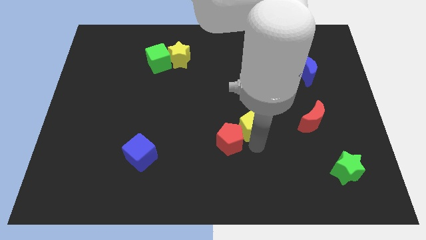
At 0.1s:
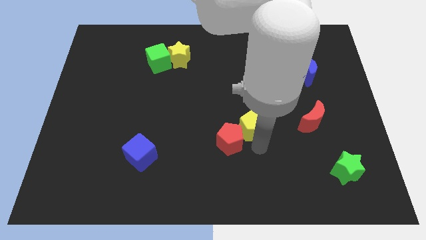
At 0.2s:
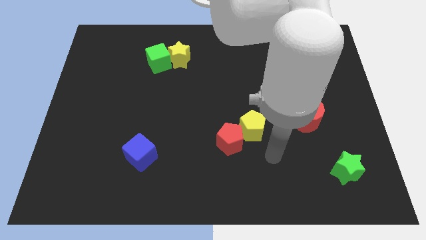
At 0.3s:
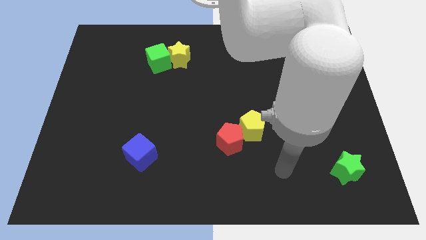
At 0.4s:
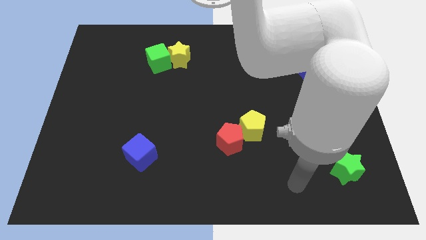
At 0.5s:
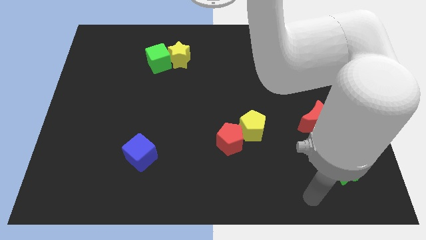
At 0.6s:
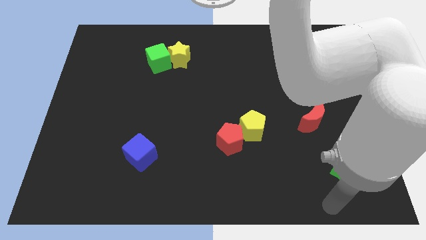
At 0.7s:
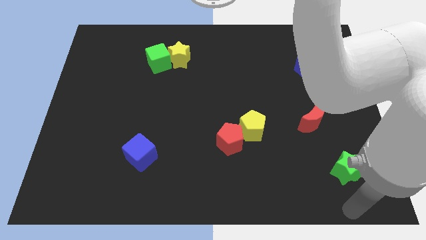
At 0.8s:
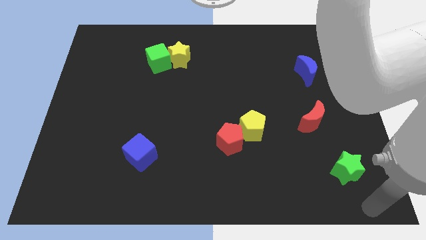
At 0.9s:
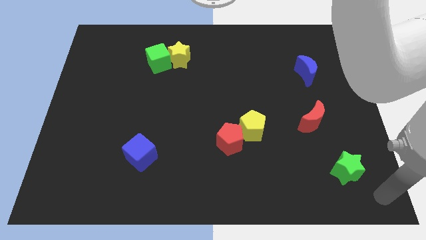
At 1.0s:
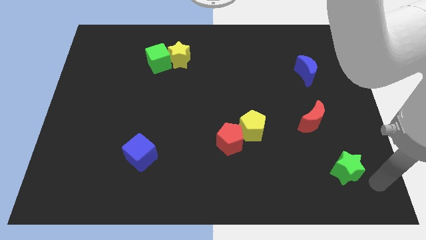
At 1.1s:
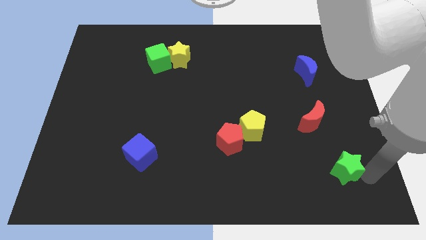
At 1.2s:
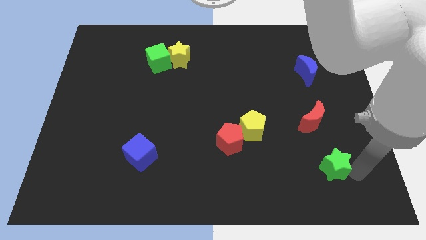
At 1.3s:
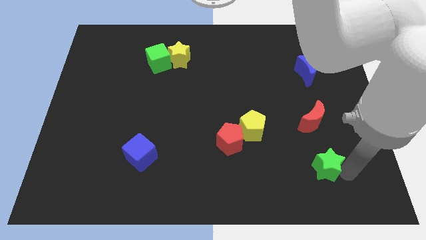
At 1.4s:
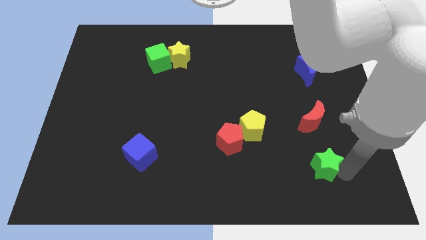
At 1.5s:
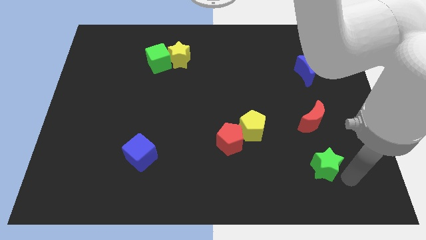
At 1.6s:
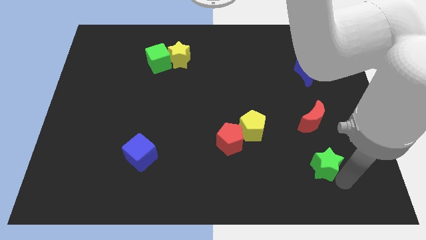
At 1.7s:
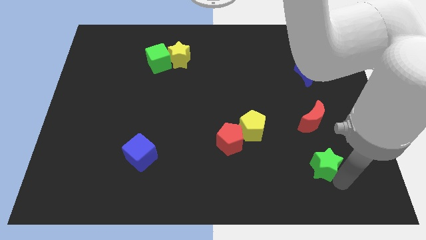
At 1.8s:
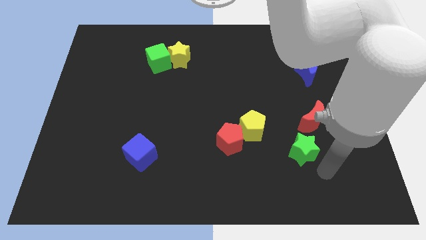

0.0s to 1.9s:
slightly move the green star vertically to the bottom side of the red crescent

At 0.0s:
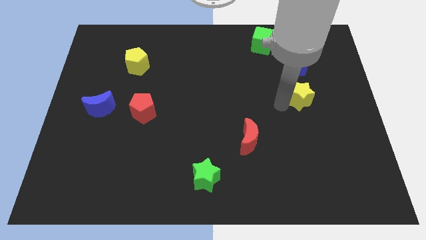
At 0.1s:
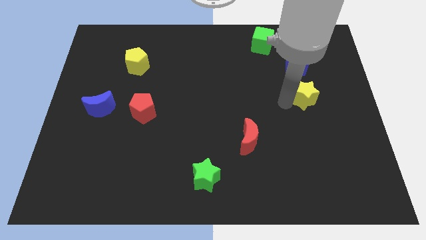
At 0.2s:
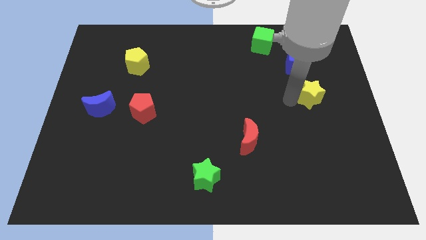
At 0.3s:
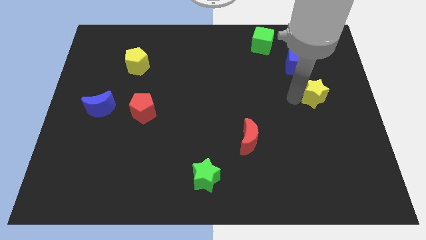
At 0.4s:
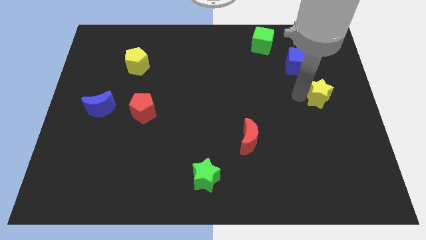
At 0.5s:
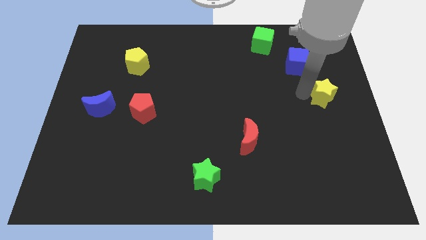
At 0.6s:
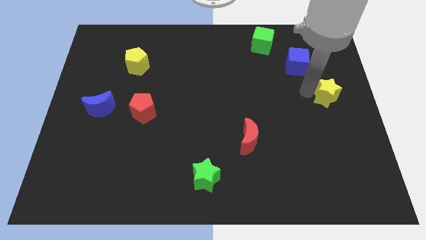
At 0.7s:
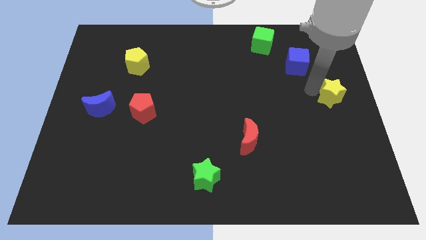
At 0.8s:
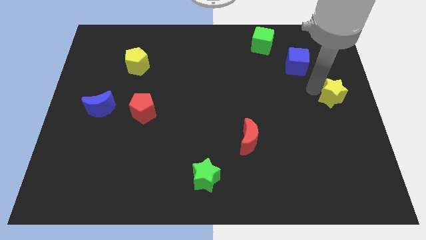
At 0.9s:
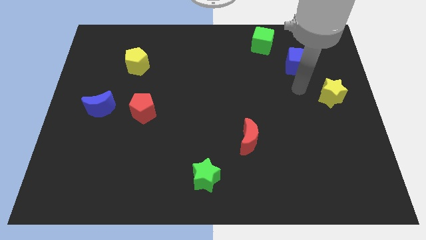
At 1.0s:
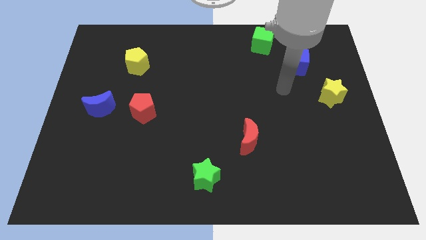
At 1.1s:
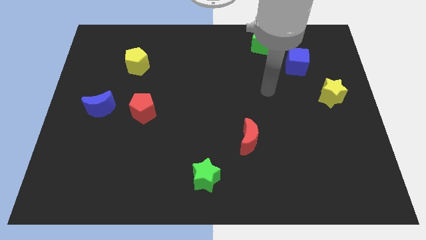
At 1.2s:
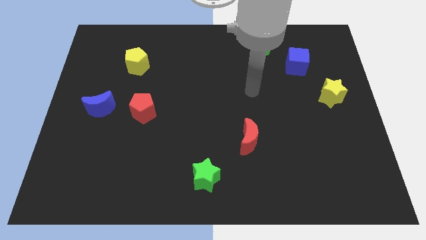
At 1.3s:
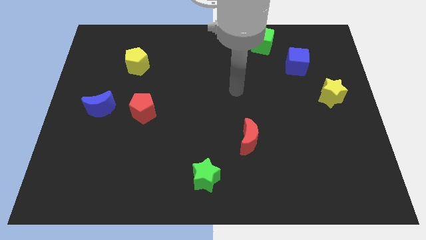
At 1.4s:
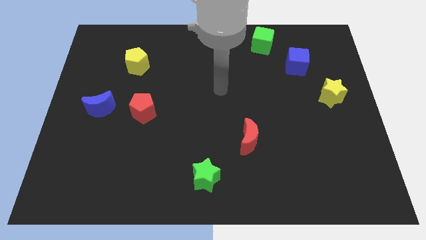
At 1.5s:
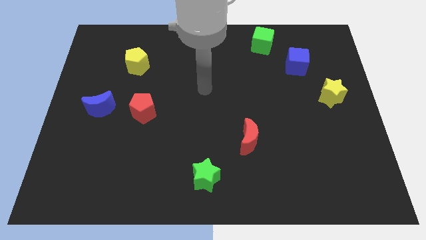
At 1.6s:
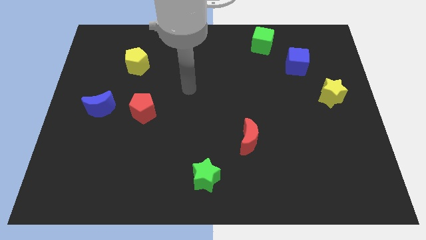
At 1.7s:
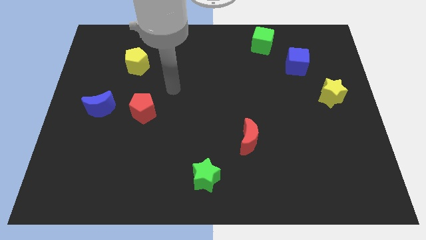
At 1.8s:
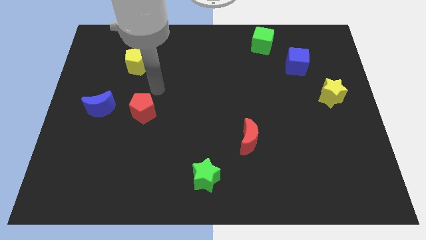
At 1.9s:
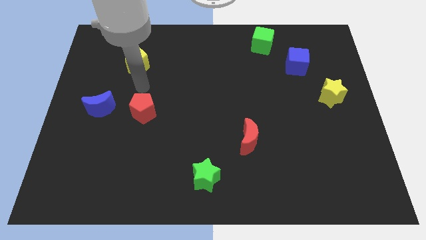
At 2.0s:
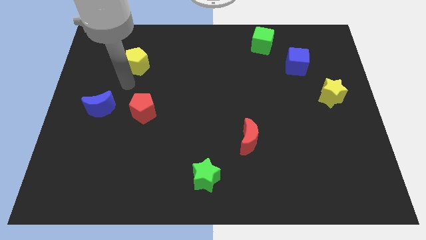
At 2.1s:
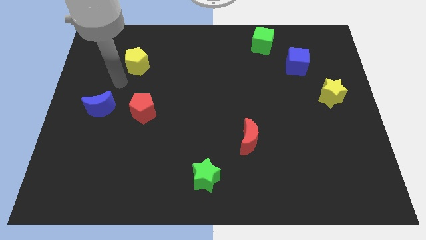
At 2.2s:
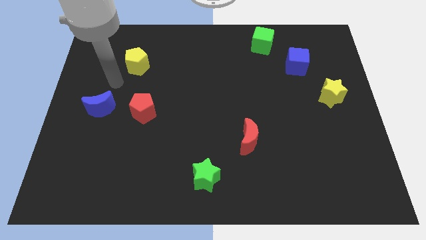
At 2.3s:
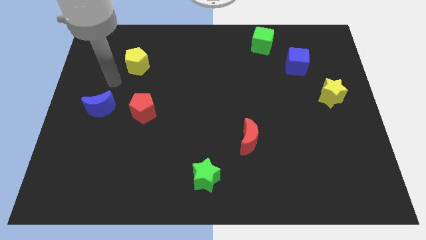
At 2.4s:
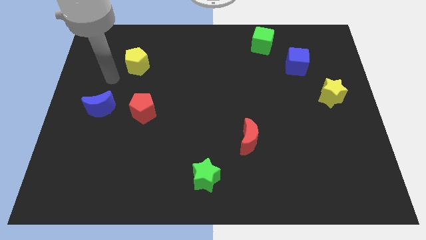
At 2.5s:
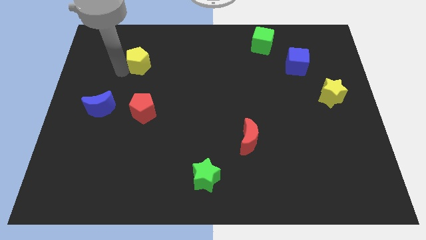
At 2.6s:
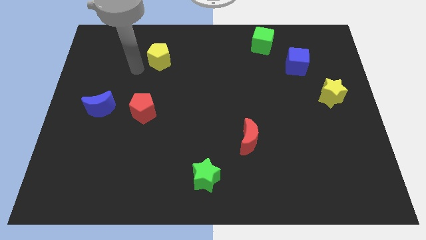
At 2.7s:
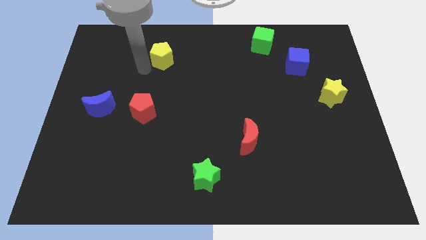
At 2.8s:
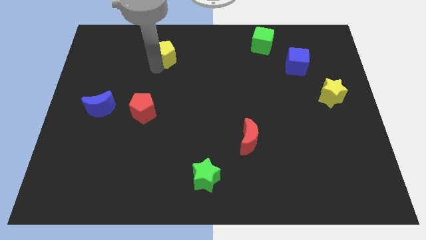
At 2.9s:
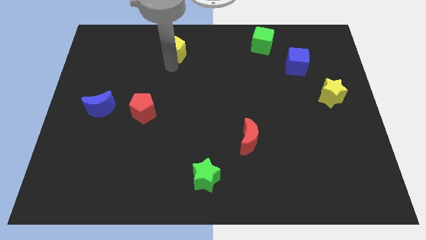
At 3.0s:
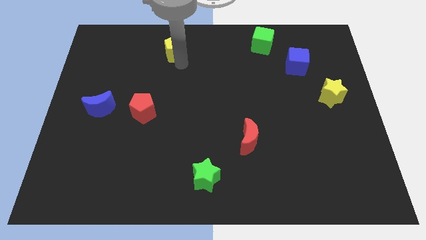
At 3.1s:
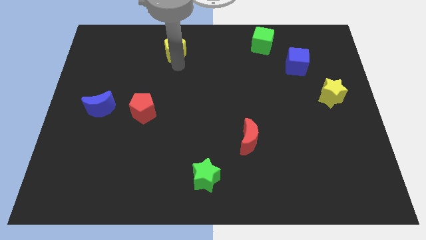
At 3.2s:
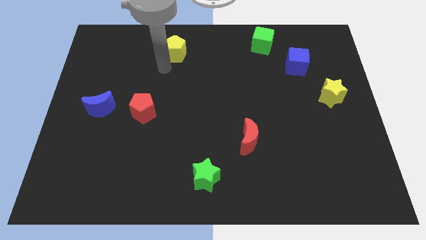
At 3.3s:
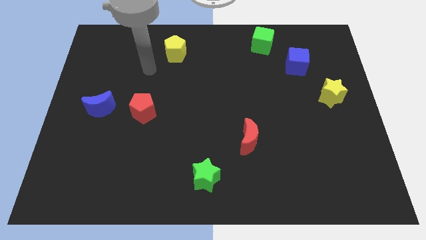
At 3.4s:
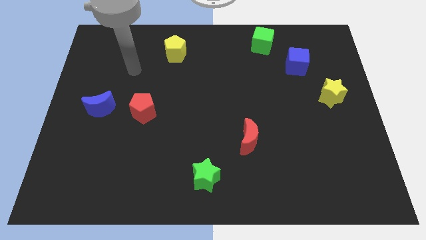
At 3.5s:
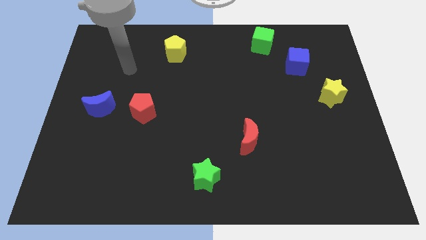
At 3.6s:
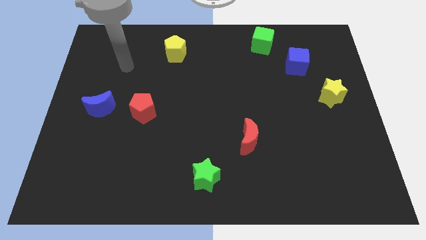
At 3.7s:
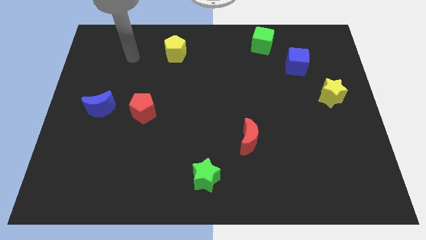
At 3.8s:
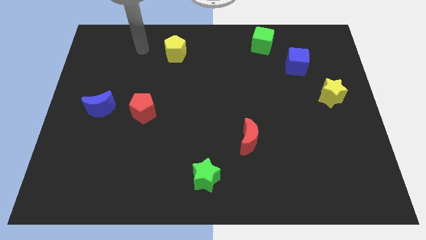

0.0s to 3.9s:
push the yellow star towards right side of the board

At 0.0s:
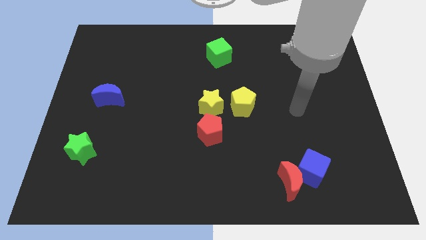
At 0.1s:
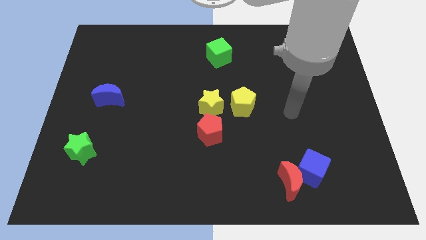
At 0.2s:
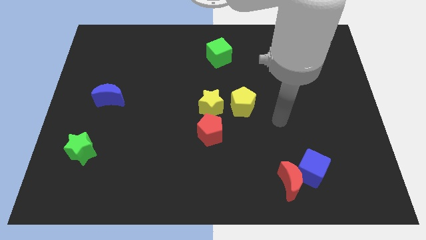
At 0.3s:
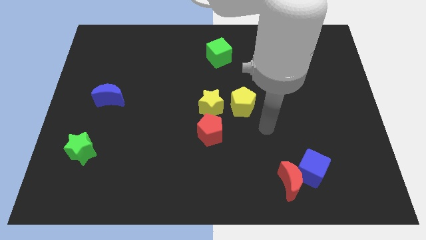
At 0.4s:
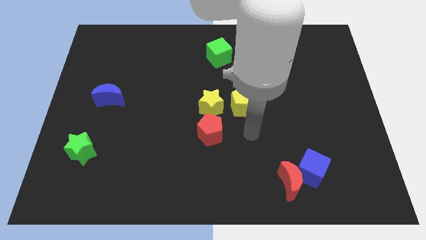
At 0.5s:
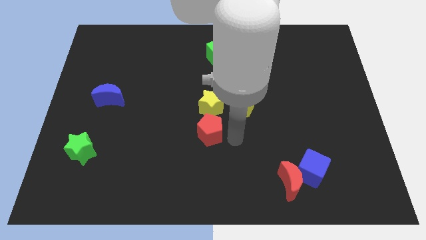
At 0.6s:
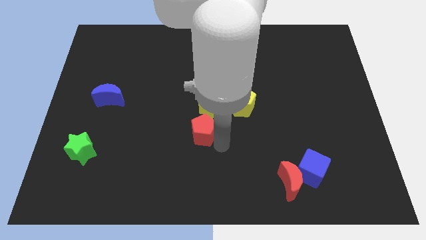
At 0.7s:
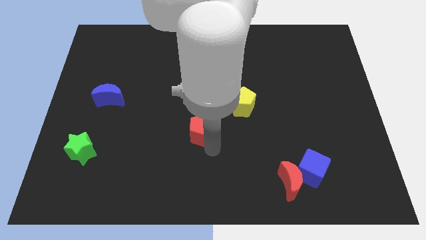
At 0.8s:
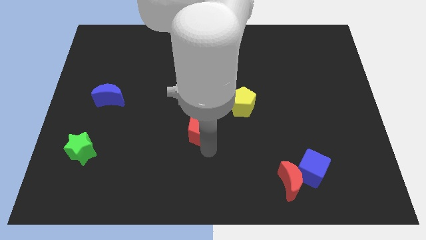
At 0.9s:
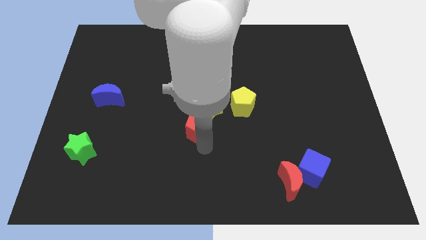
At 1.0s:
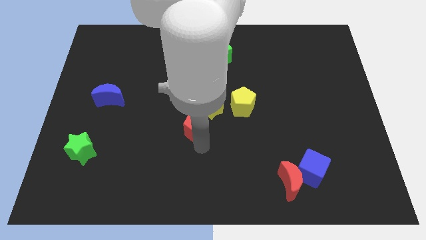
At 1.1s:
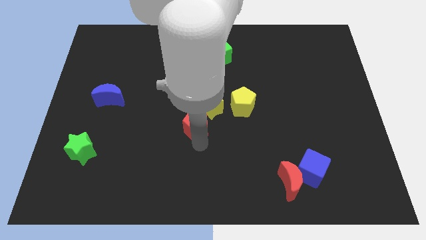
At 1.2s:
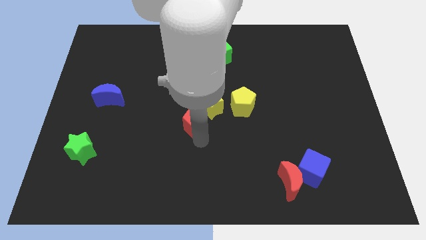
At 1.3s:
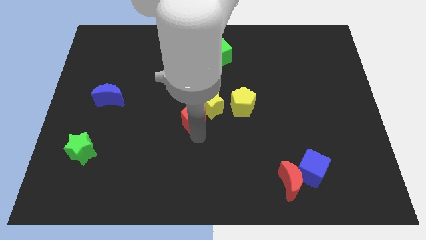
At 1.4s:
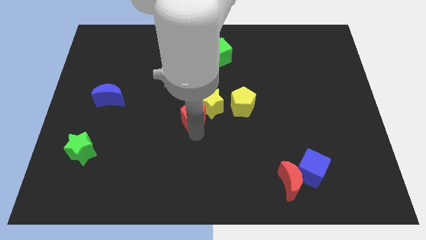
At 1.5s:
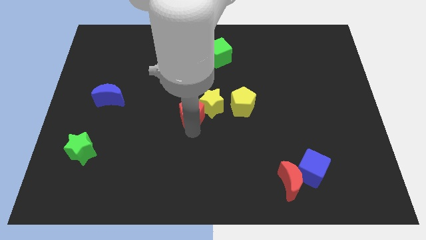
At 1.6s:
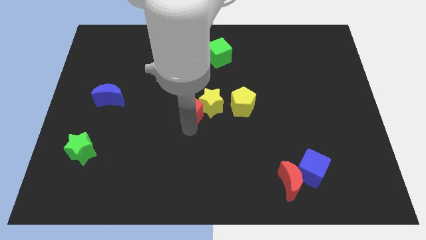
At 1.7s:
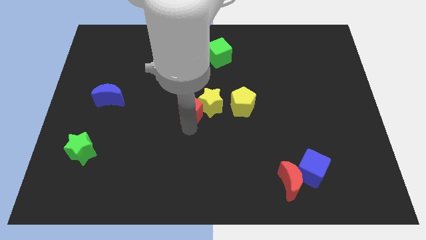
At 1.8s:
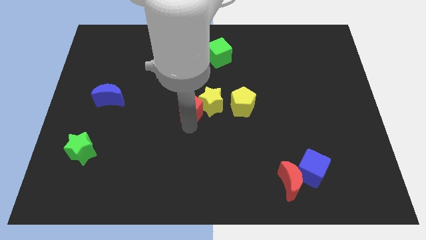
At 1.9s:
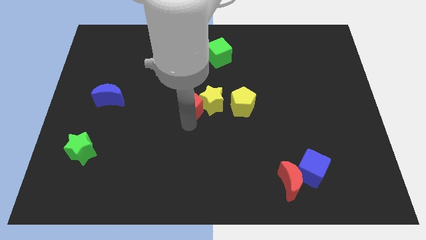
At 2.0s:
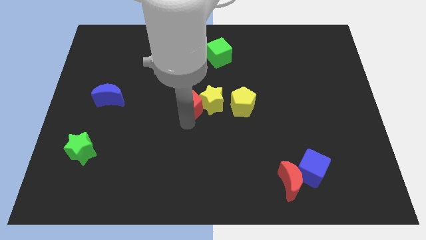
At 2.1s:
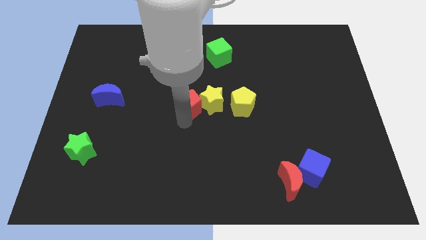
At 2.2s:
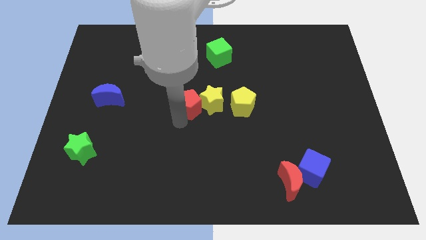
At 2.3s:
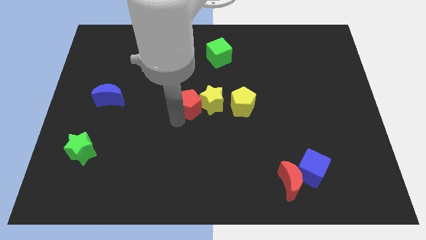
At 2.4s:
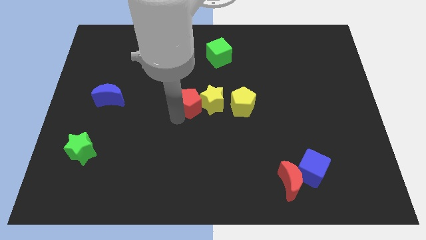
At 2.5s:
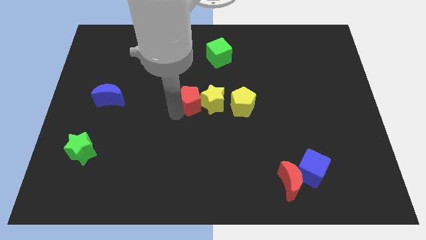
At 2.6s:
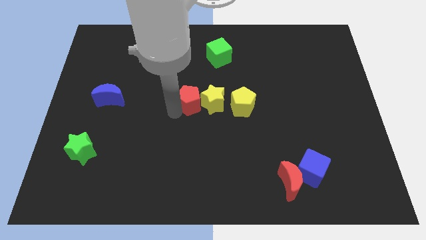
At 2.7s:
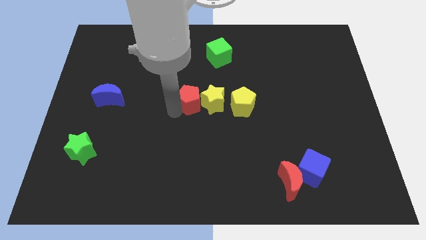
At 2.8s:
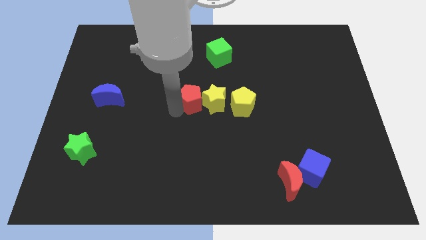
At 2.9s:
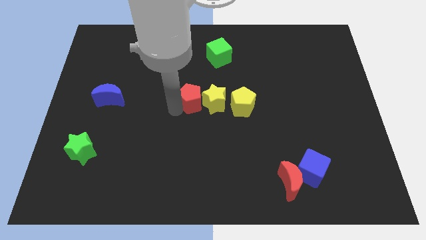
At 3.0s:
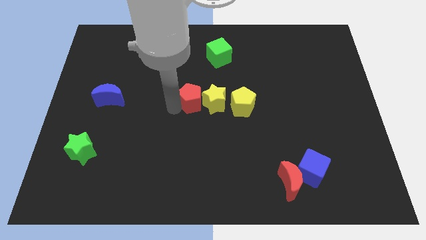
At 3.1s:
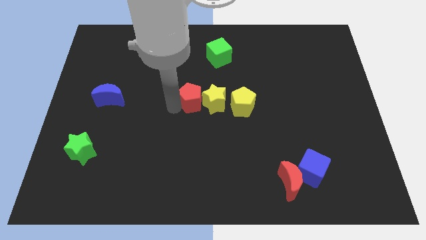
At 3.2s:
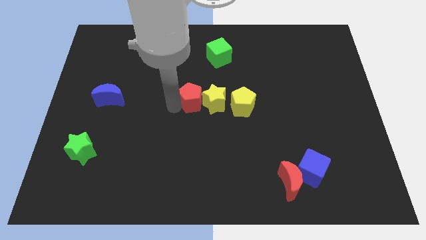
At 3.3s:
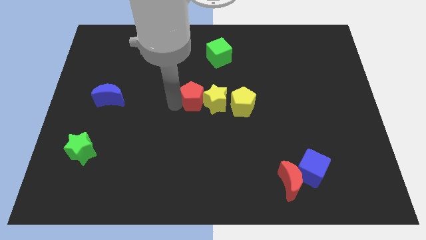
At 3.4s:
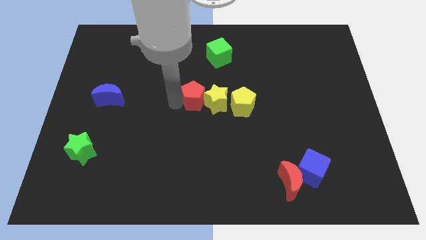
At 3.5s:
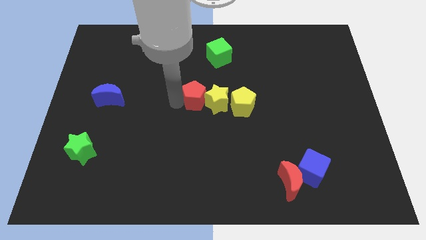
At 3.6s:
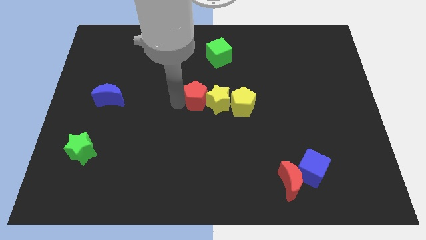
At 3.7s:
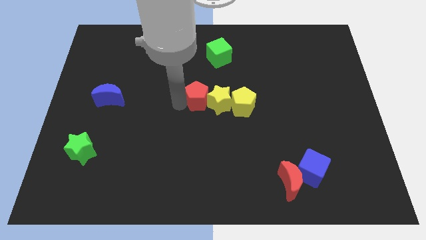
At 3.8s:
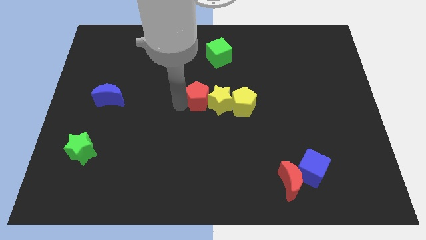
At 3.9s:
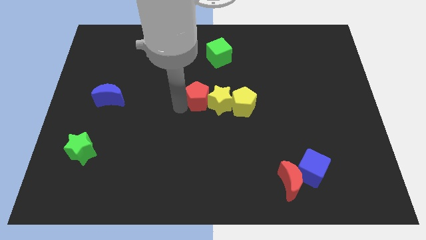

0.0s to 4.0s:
move red pentagon into yellow star
